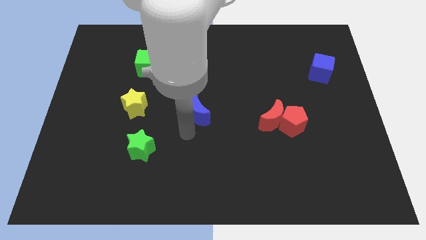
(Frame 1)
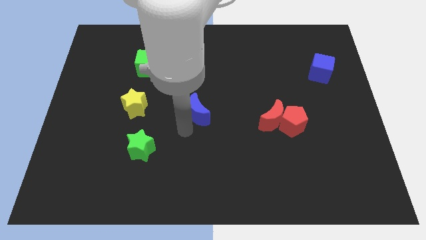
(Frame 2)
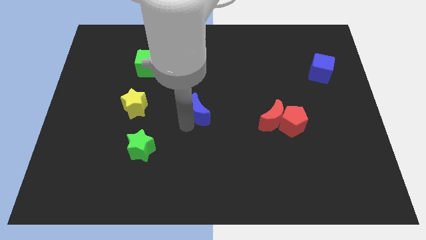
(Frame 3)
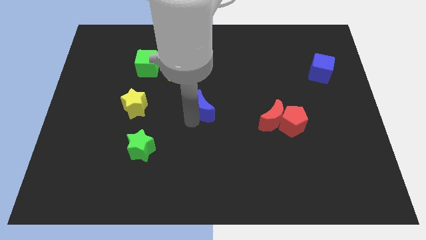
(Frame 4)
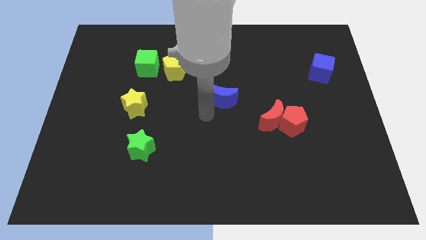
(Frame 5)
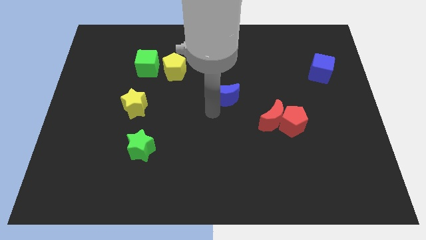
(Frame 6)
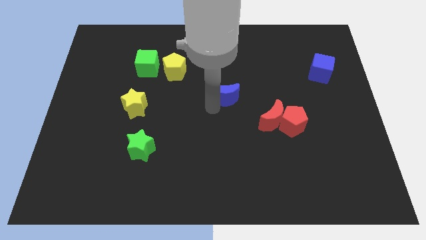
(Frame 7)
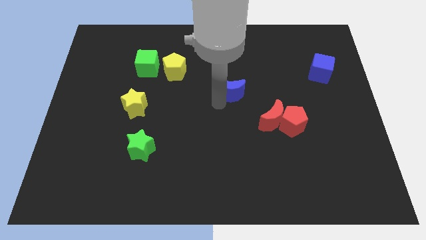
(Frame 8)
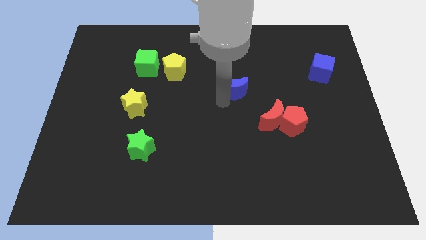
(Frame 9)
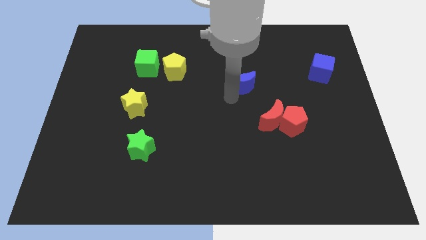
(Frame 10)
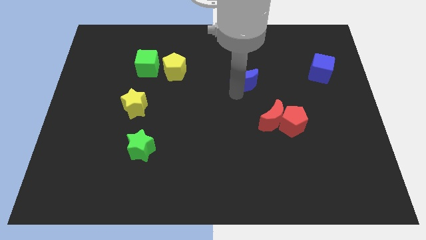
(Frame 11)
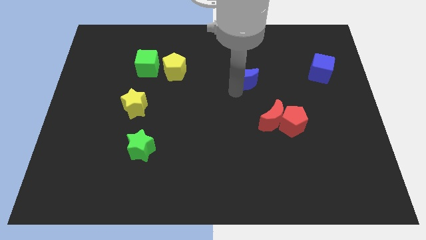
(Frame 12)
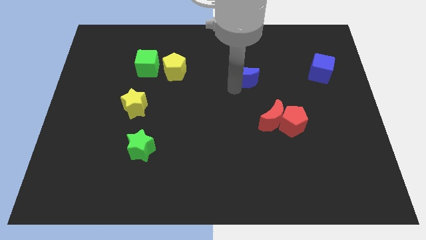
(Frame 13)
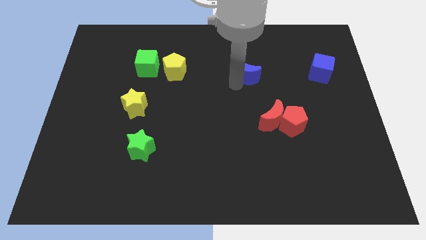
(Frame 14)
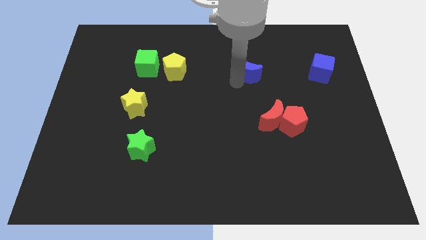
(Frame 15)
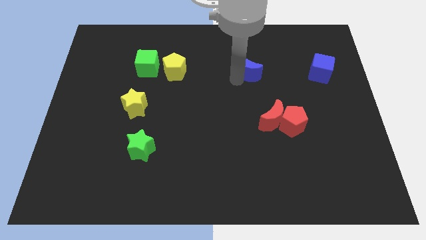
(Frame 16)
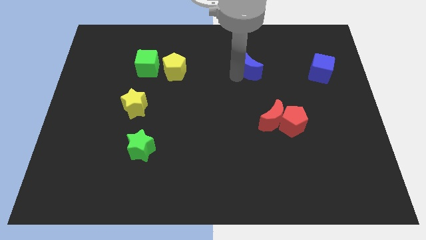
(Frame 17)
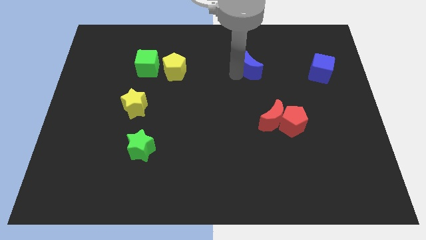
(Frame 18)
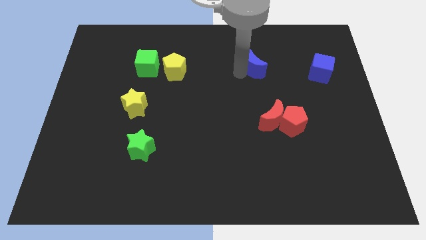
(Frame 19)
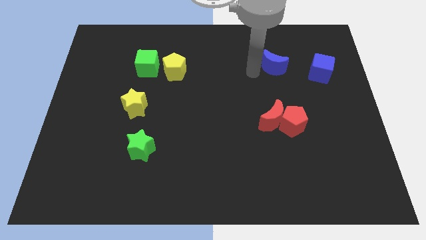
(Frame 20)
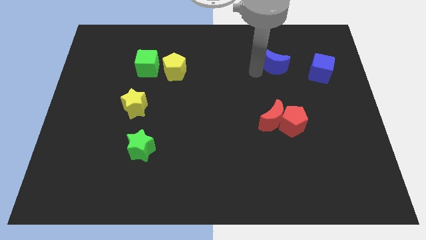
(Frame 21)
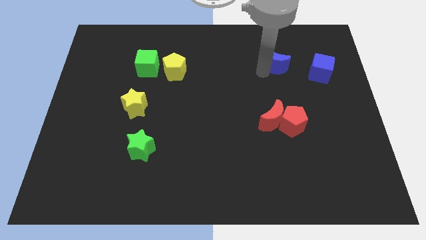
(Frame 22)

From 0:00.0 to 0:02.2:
place blue moon to the top of red moon

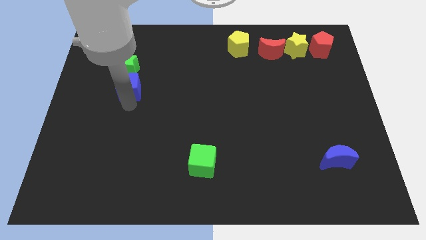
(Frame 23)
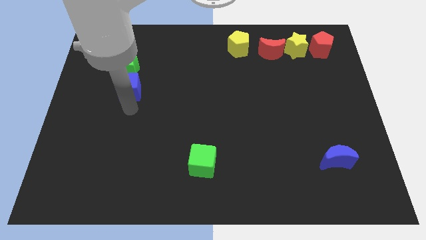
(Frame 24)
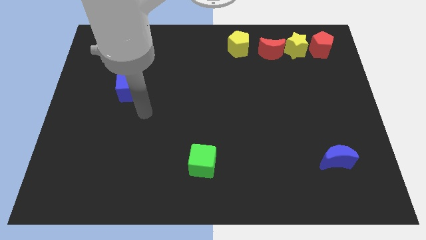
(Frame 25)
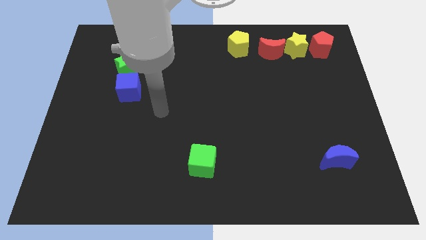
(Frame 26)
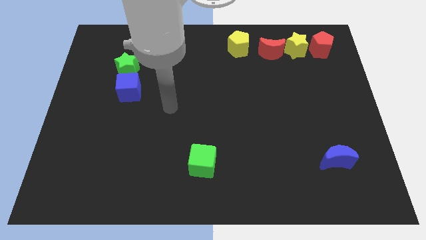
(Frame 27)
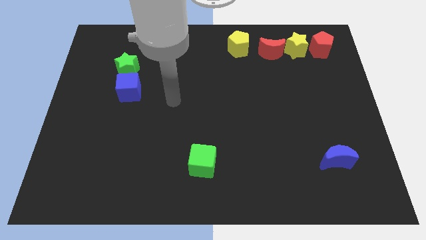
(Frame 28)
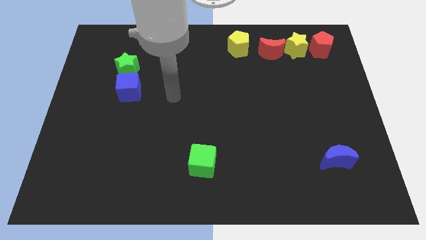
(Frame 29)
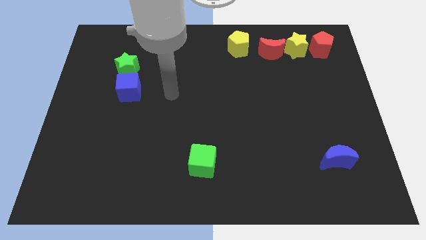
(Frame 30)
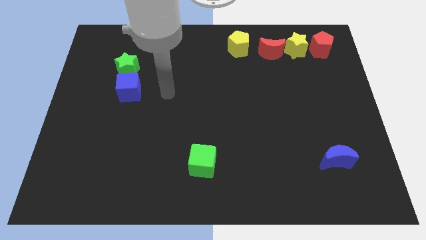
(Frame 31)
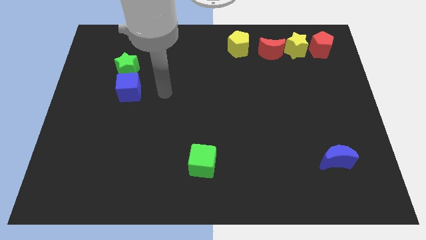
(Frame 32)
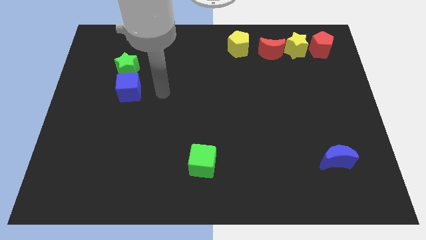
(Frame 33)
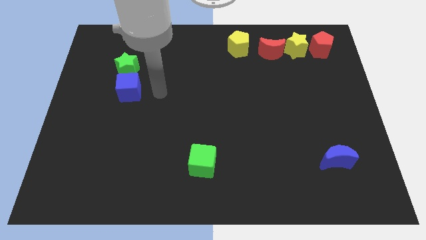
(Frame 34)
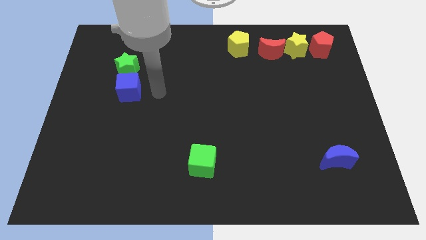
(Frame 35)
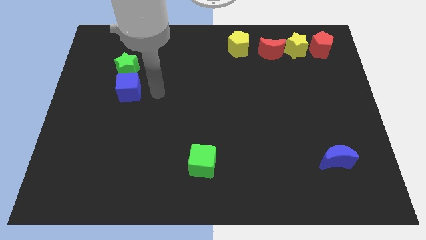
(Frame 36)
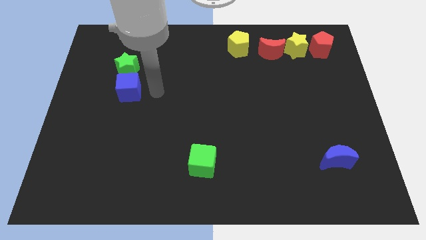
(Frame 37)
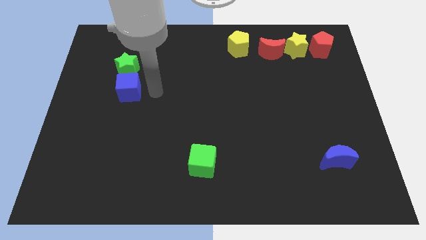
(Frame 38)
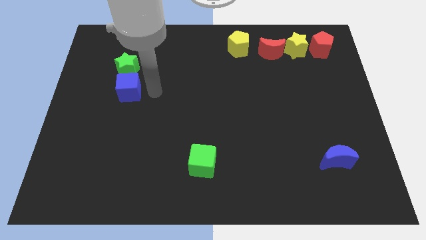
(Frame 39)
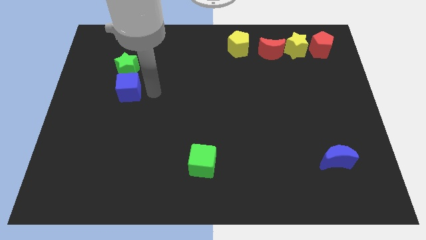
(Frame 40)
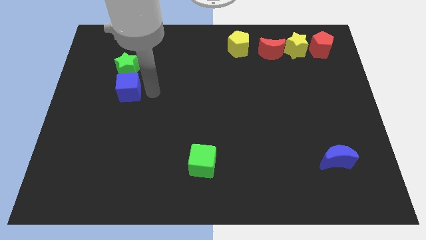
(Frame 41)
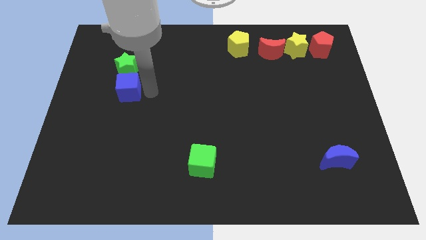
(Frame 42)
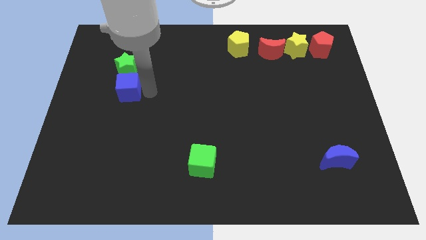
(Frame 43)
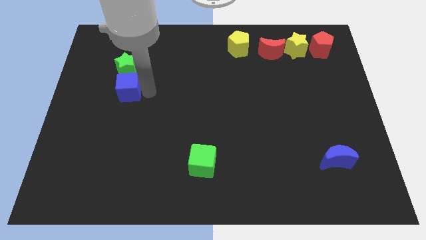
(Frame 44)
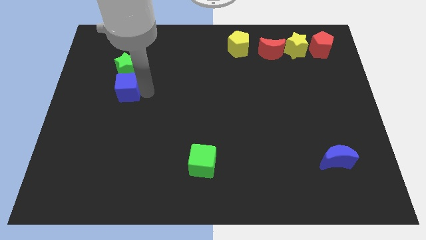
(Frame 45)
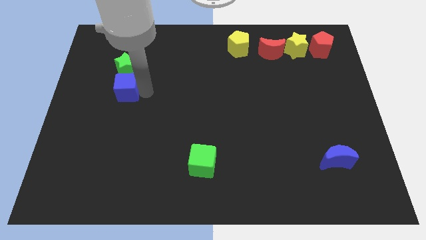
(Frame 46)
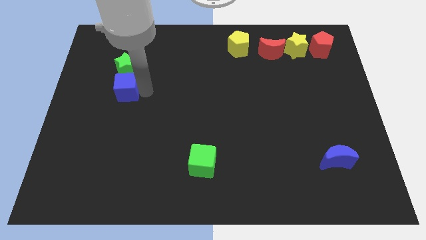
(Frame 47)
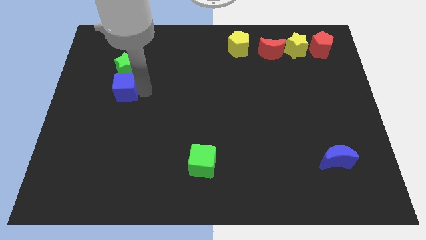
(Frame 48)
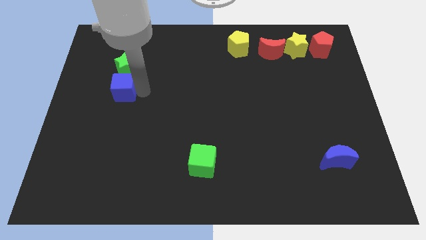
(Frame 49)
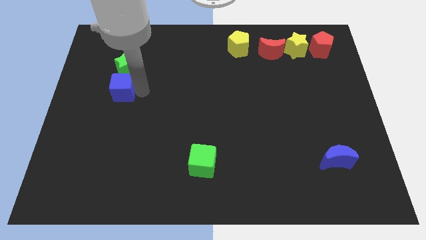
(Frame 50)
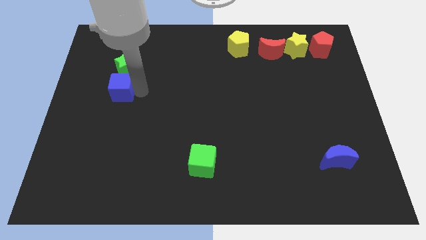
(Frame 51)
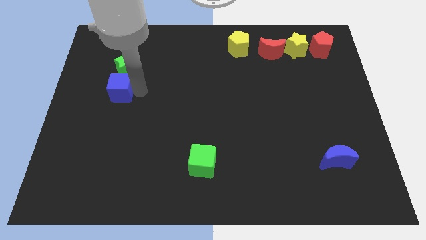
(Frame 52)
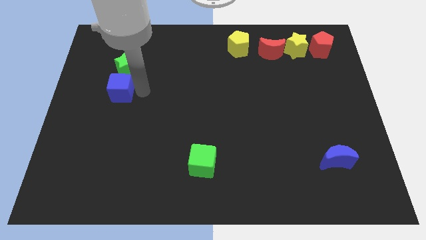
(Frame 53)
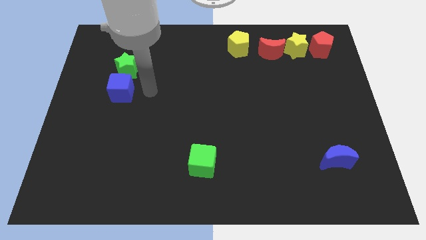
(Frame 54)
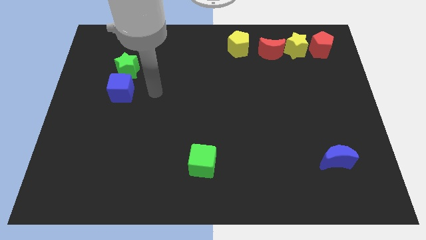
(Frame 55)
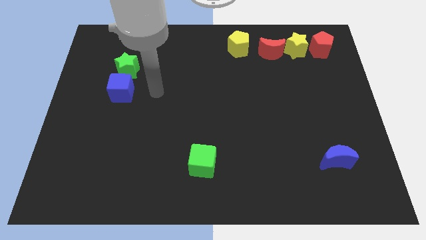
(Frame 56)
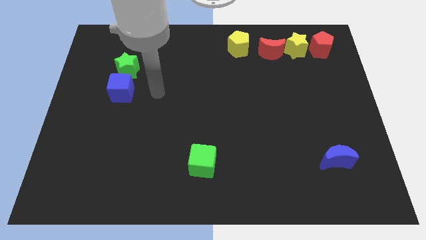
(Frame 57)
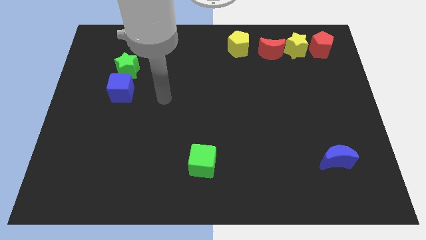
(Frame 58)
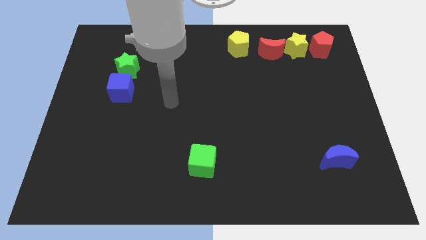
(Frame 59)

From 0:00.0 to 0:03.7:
adjust the blue cube under the green star

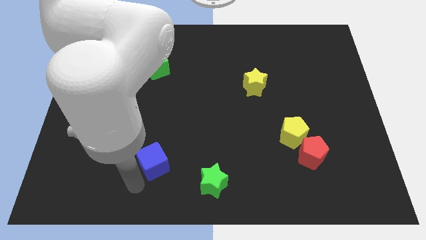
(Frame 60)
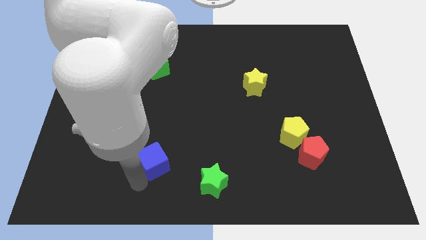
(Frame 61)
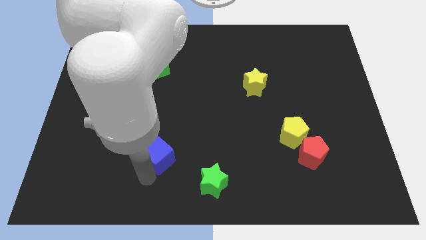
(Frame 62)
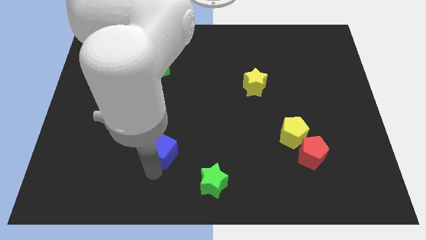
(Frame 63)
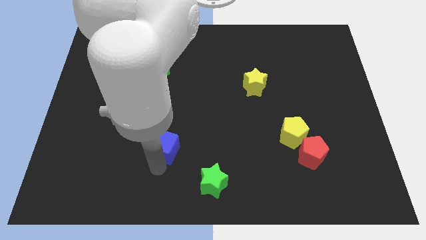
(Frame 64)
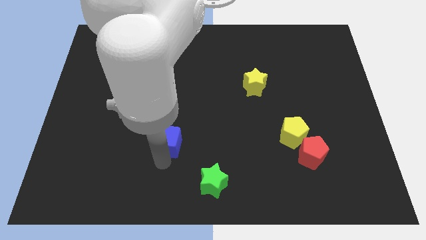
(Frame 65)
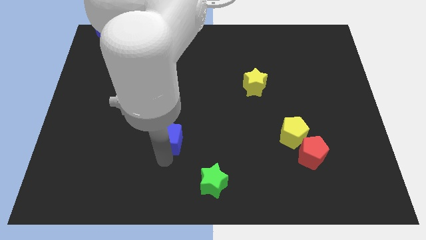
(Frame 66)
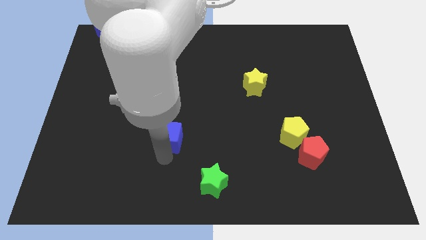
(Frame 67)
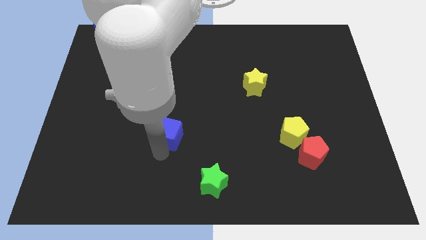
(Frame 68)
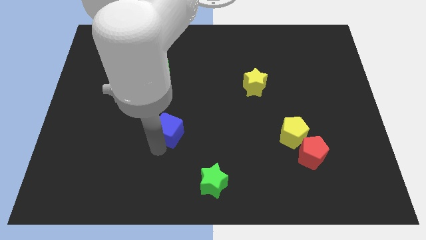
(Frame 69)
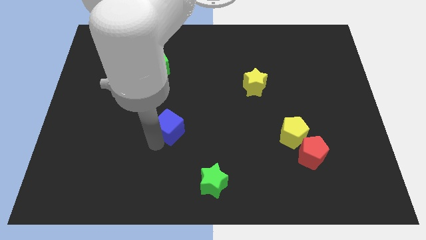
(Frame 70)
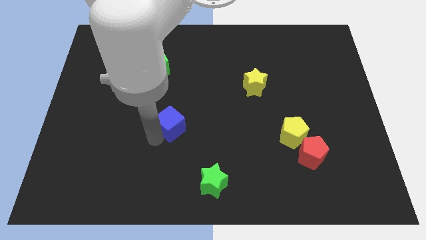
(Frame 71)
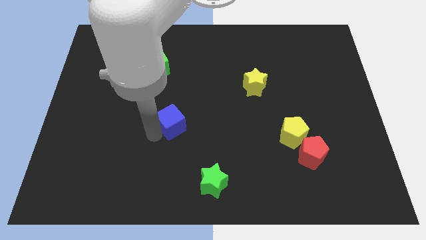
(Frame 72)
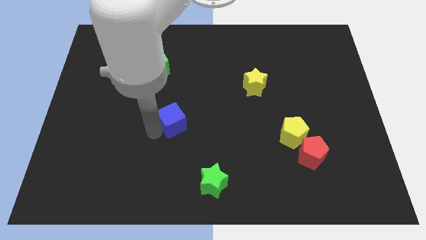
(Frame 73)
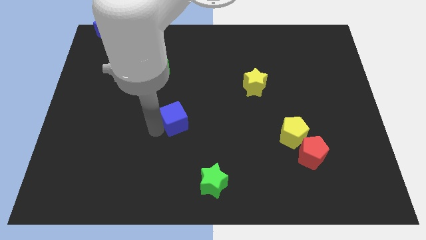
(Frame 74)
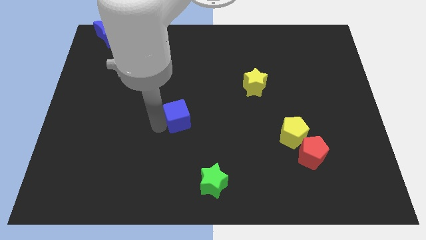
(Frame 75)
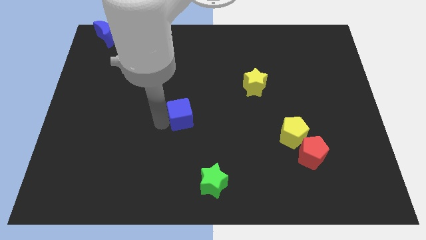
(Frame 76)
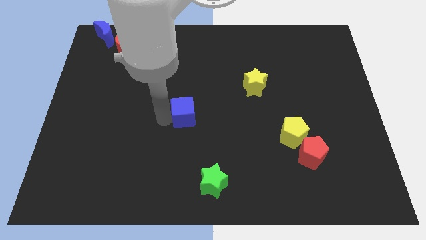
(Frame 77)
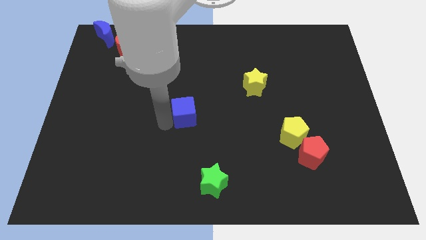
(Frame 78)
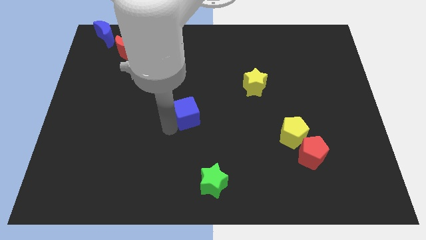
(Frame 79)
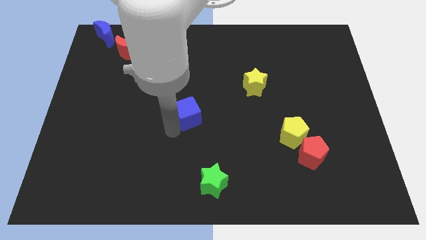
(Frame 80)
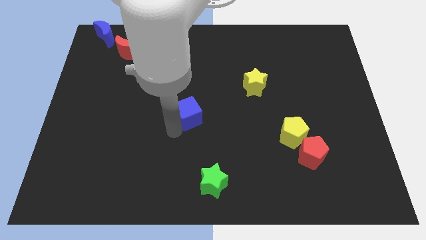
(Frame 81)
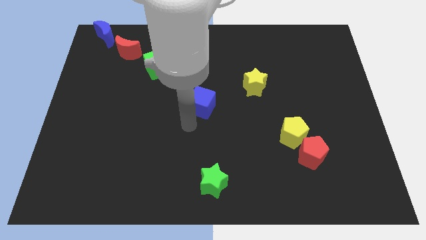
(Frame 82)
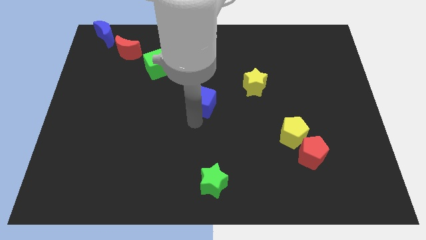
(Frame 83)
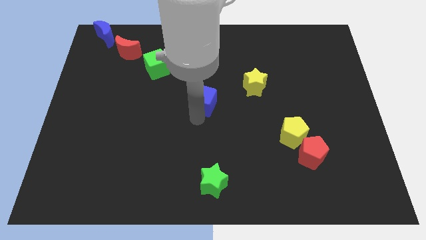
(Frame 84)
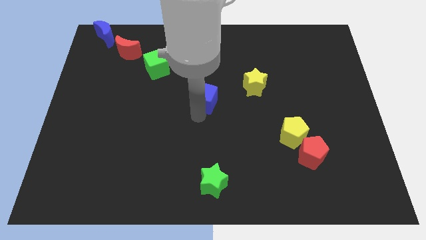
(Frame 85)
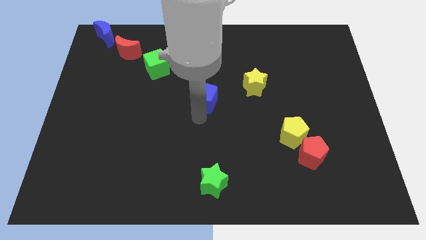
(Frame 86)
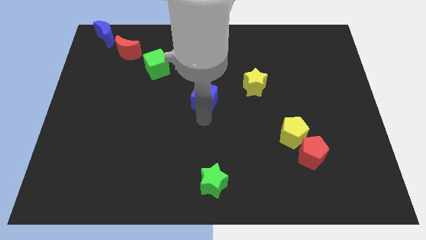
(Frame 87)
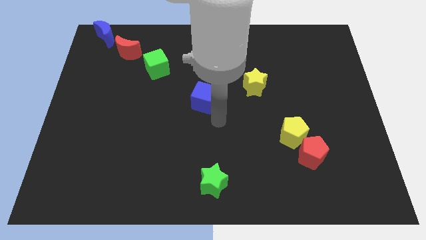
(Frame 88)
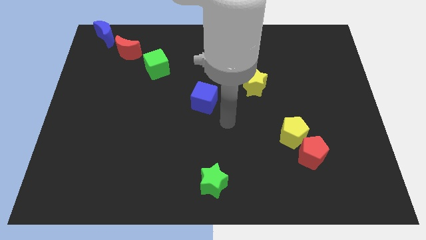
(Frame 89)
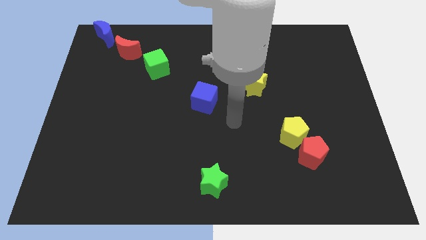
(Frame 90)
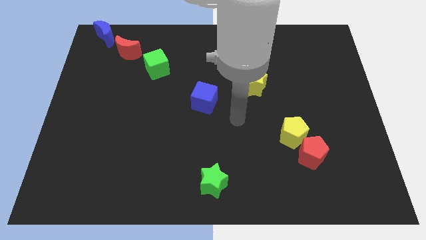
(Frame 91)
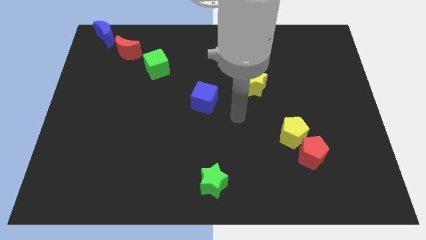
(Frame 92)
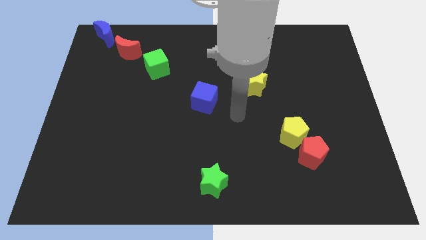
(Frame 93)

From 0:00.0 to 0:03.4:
move blue cube diagonally upwards
